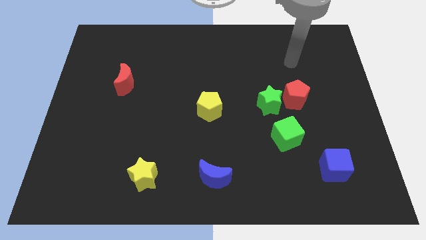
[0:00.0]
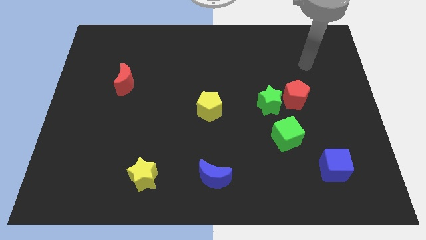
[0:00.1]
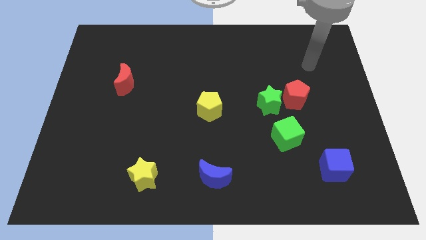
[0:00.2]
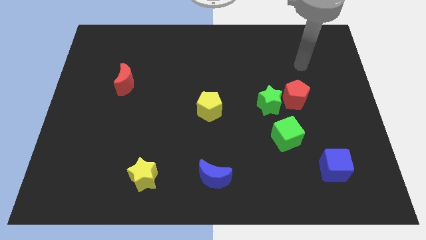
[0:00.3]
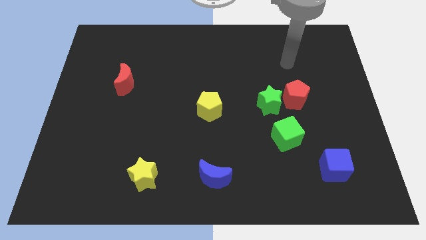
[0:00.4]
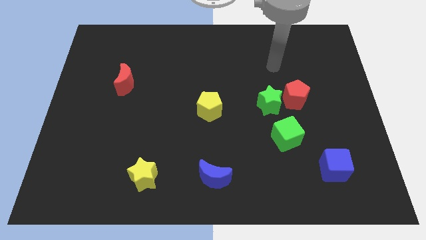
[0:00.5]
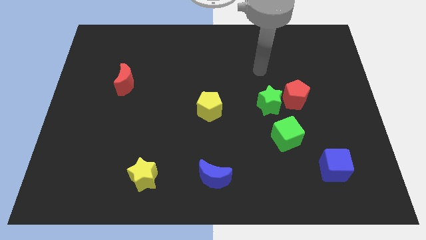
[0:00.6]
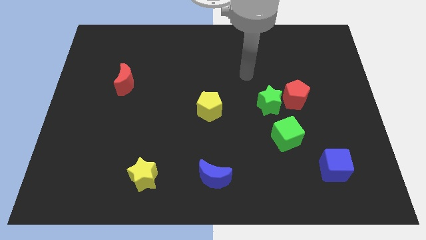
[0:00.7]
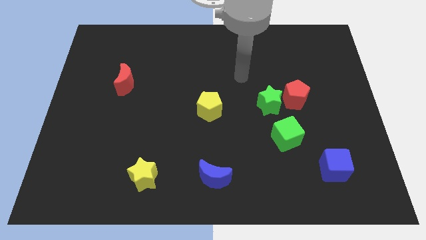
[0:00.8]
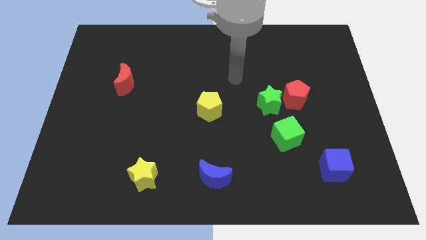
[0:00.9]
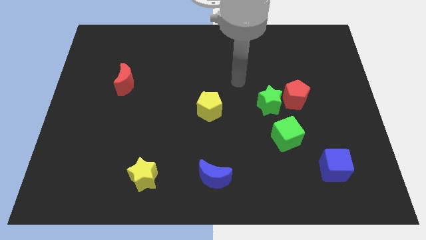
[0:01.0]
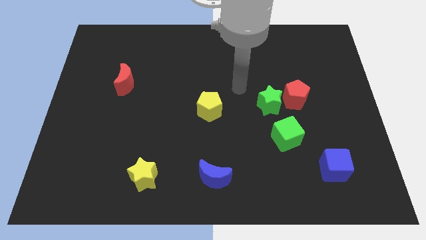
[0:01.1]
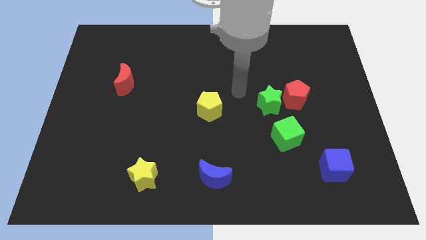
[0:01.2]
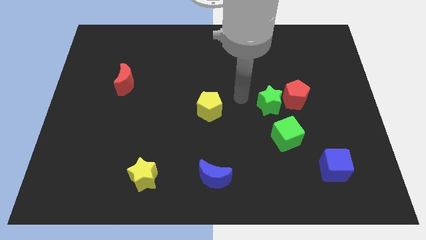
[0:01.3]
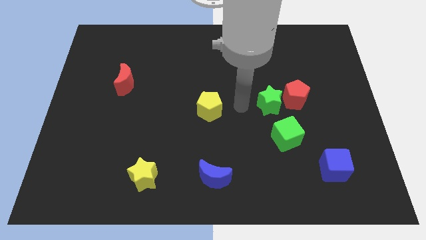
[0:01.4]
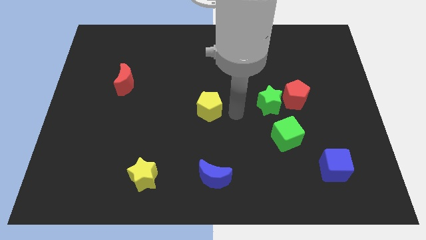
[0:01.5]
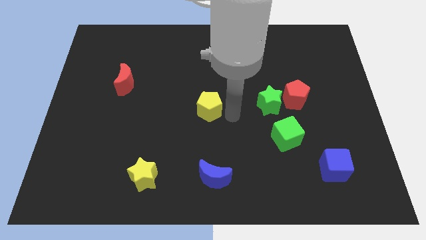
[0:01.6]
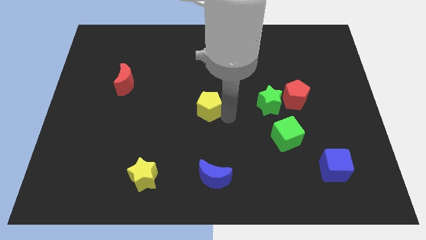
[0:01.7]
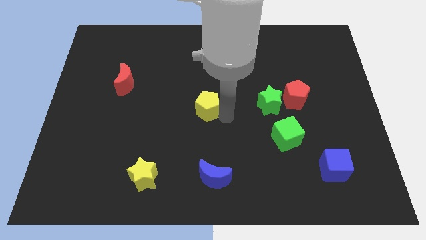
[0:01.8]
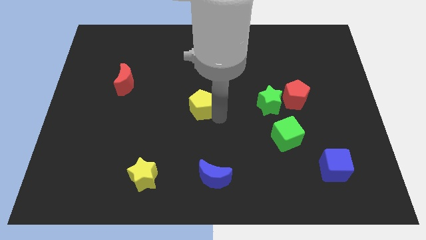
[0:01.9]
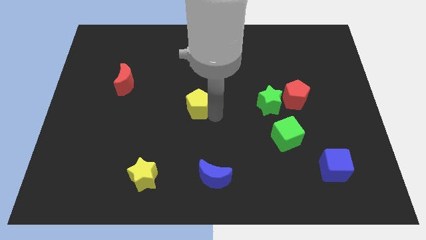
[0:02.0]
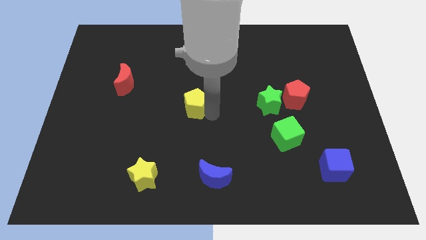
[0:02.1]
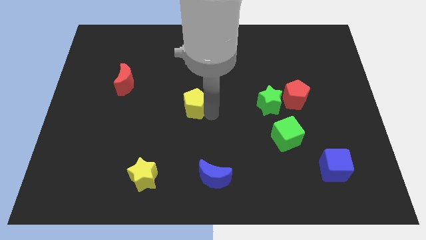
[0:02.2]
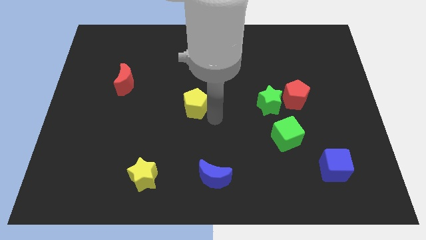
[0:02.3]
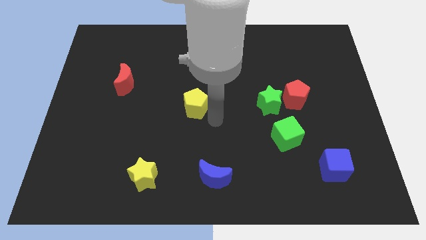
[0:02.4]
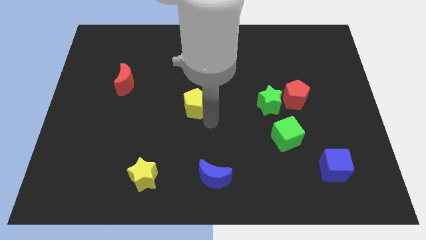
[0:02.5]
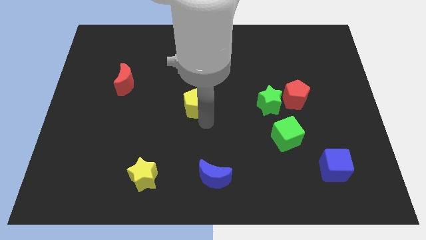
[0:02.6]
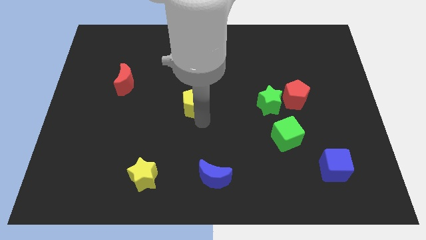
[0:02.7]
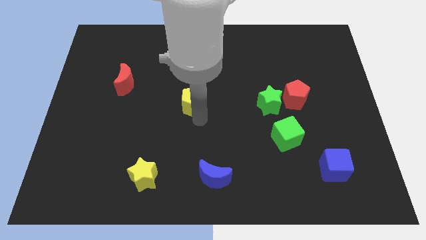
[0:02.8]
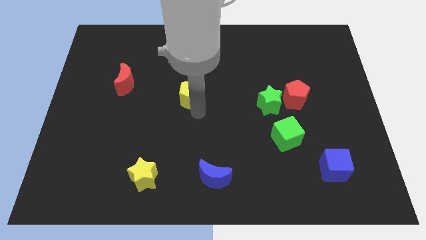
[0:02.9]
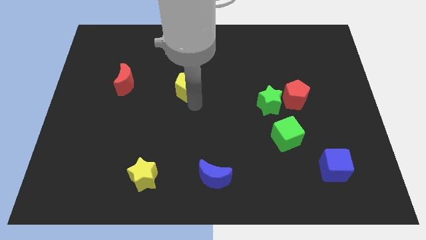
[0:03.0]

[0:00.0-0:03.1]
place yellow pentagon towards the right of red crescent

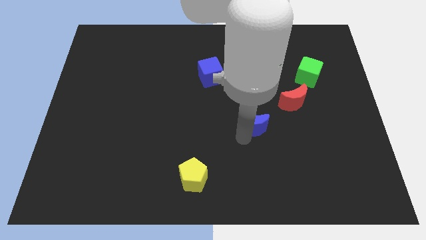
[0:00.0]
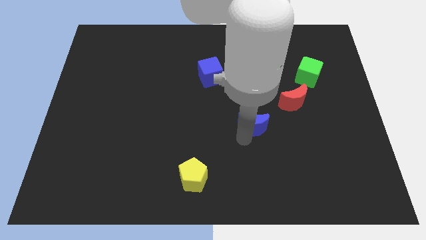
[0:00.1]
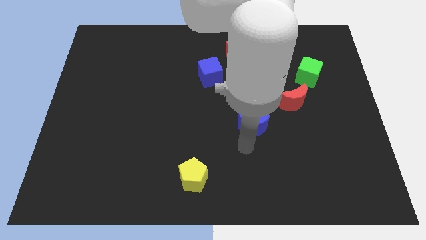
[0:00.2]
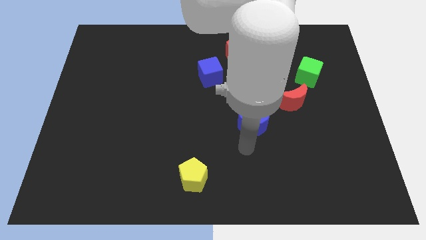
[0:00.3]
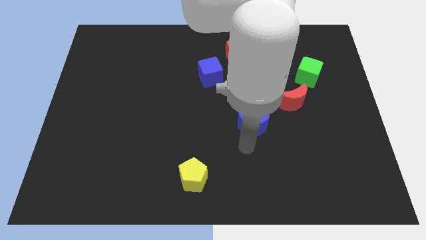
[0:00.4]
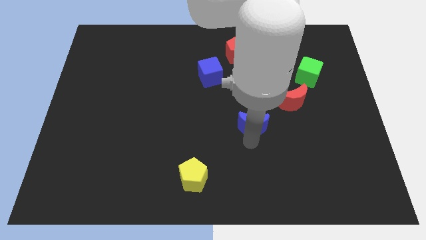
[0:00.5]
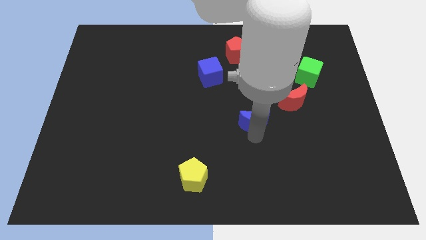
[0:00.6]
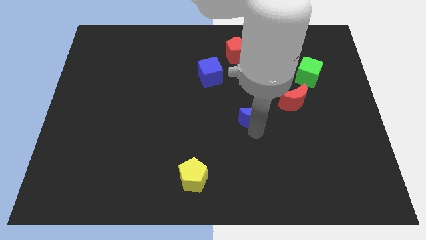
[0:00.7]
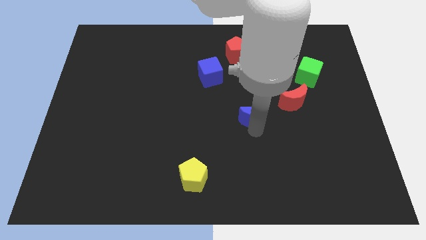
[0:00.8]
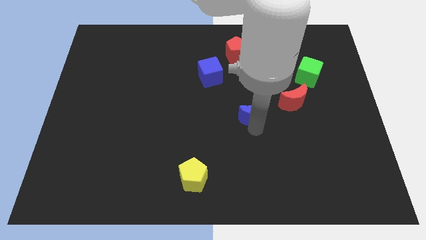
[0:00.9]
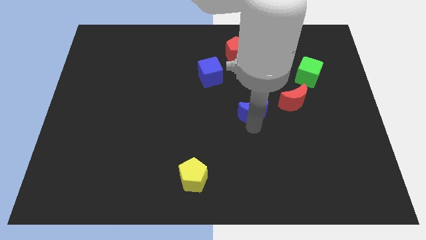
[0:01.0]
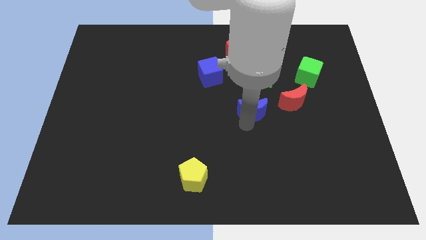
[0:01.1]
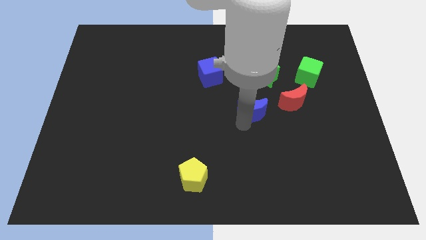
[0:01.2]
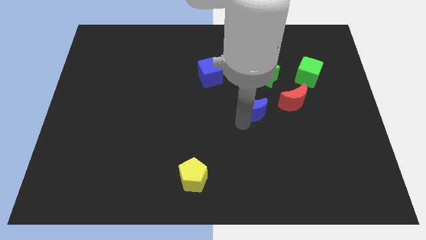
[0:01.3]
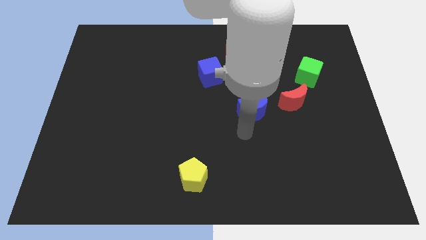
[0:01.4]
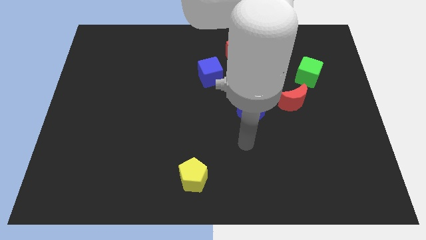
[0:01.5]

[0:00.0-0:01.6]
place the blue crescent to the left of the red crescent

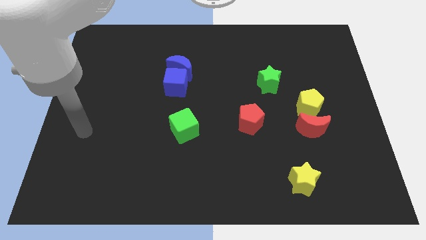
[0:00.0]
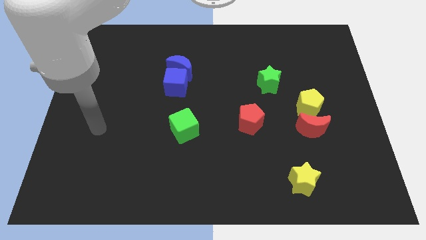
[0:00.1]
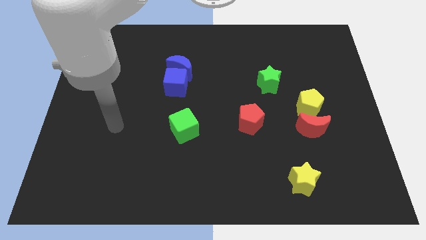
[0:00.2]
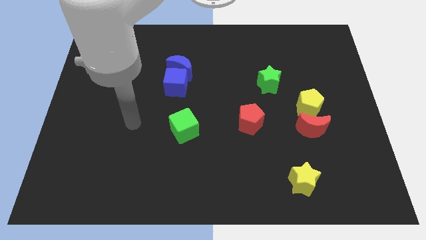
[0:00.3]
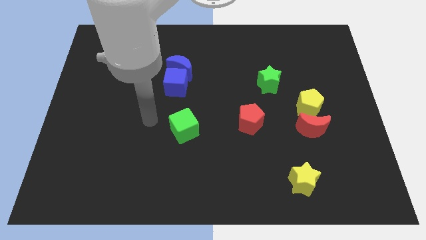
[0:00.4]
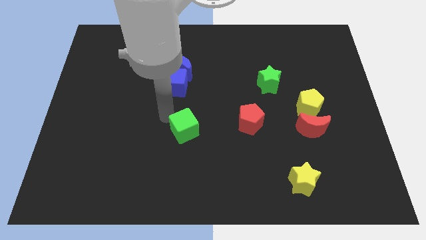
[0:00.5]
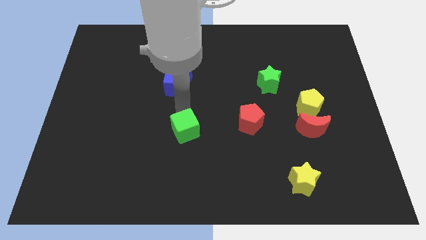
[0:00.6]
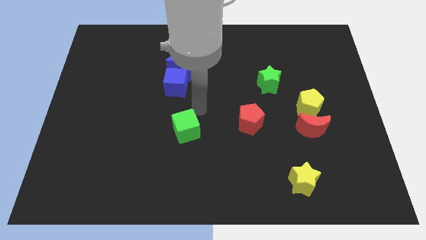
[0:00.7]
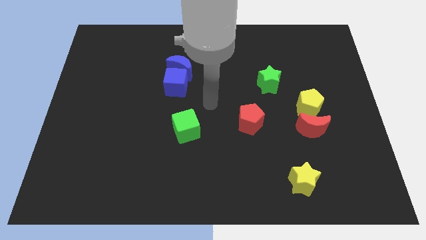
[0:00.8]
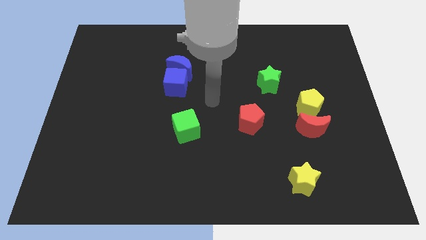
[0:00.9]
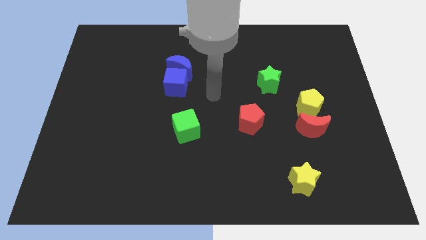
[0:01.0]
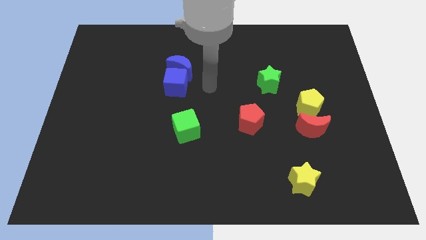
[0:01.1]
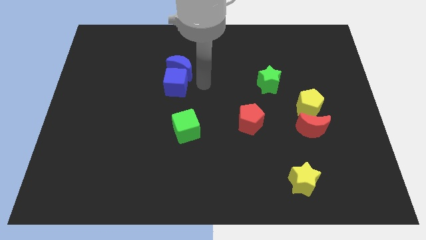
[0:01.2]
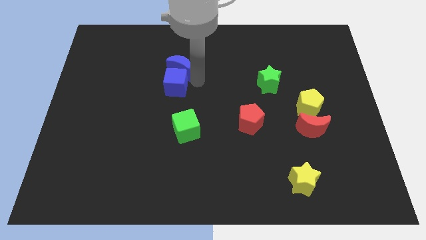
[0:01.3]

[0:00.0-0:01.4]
point your arm to the right side of the blue blocks

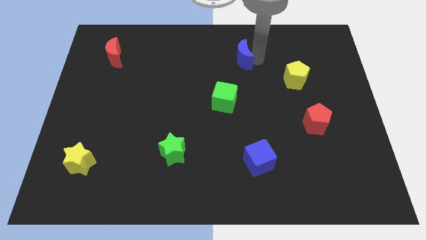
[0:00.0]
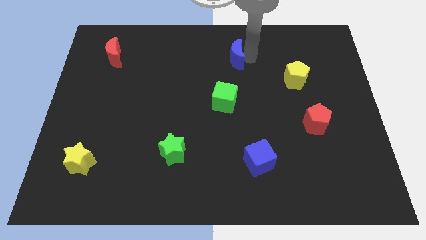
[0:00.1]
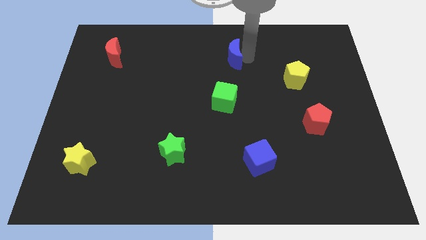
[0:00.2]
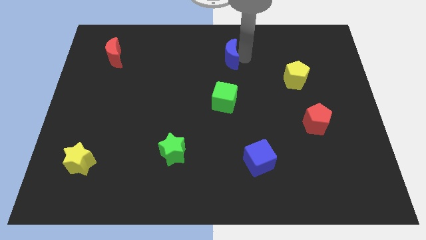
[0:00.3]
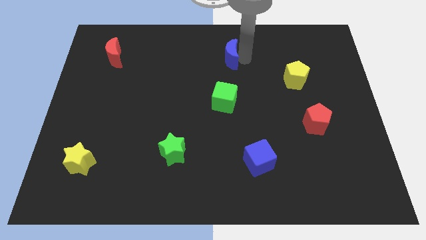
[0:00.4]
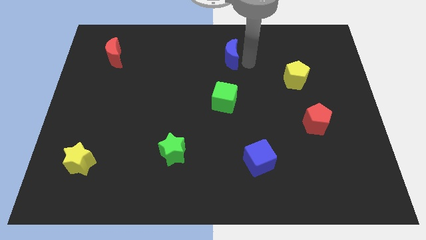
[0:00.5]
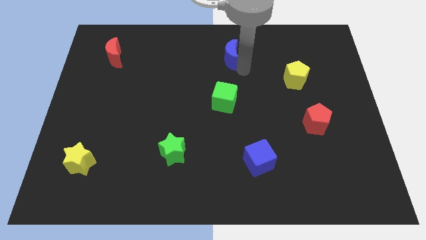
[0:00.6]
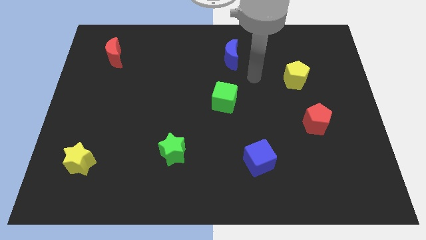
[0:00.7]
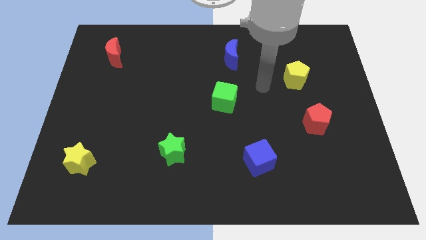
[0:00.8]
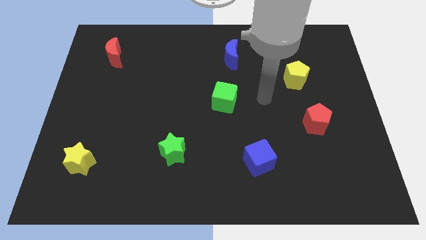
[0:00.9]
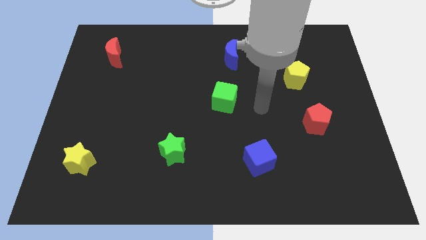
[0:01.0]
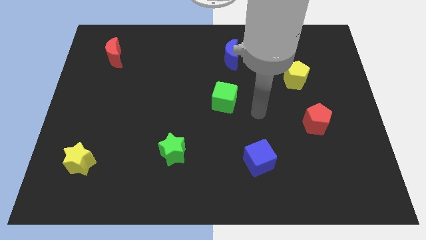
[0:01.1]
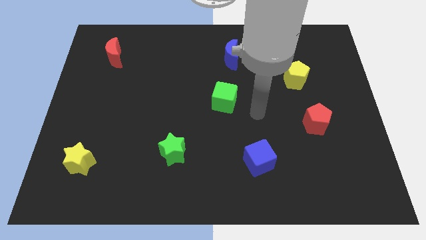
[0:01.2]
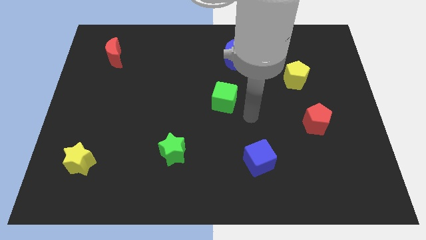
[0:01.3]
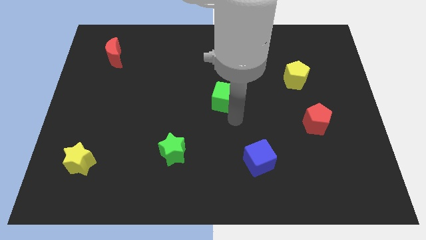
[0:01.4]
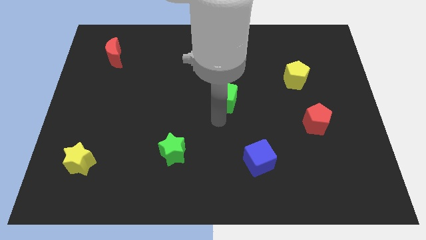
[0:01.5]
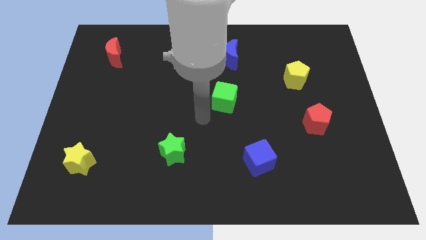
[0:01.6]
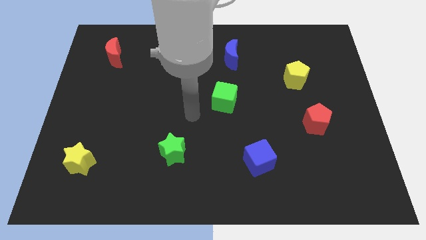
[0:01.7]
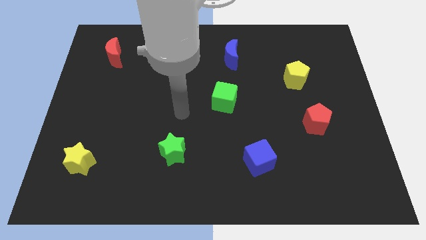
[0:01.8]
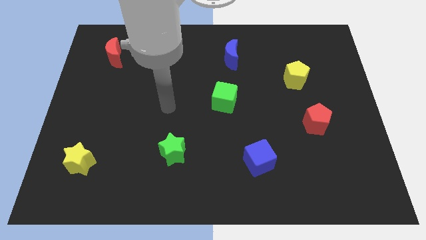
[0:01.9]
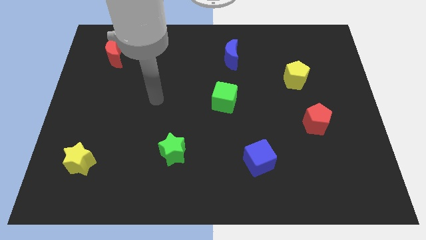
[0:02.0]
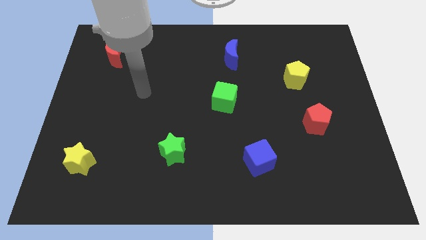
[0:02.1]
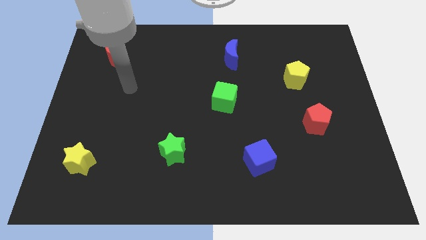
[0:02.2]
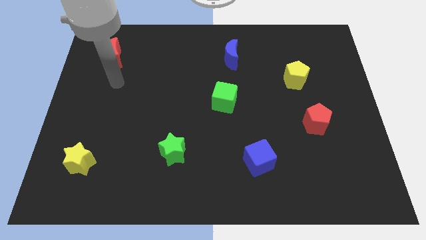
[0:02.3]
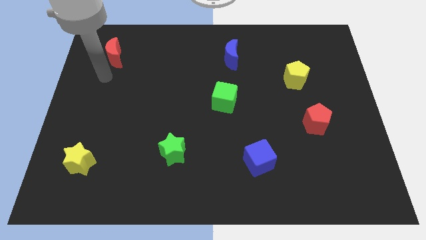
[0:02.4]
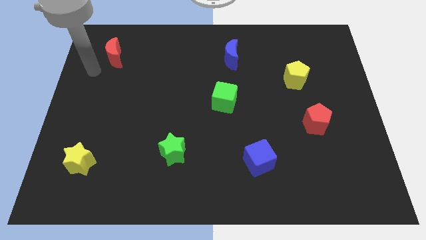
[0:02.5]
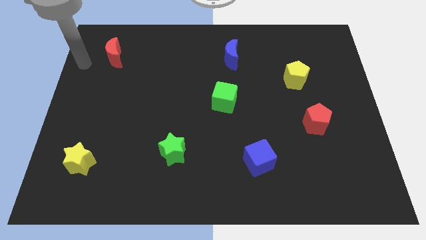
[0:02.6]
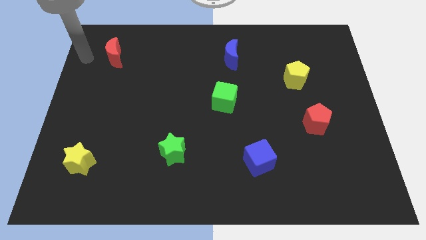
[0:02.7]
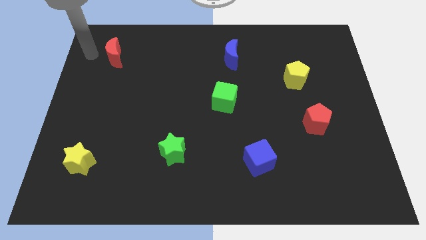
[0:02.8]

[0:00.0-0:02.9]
move your arm away from the blue moon
